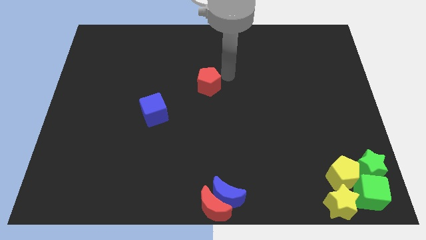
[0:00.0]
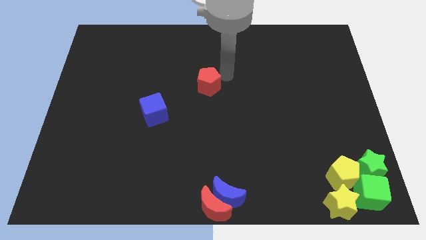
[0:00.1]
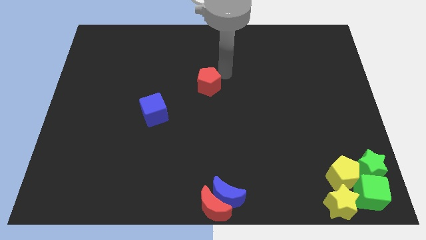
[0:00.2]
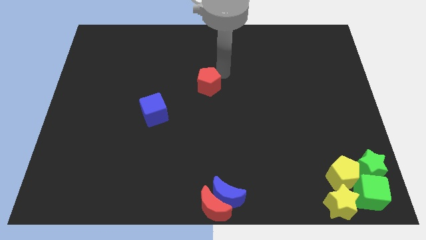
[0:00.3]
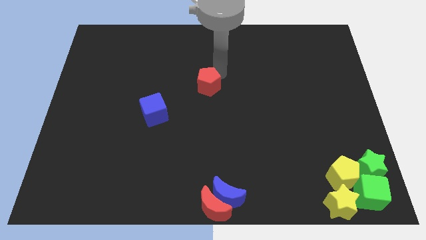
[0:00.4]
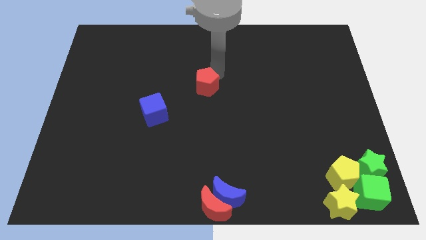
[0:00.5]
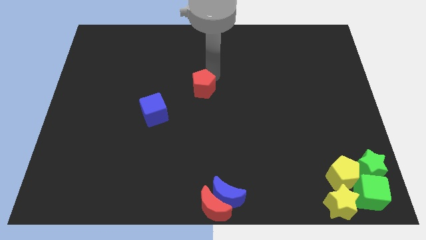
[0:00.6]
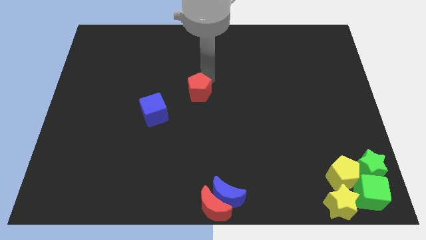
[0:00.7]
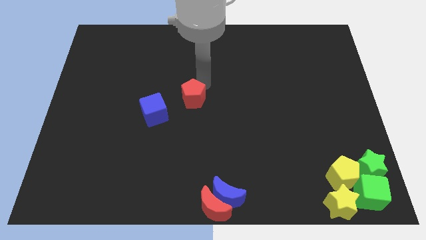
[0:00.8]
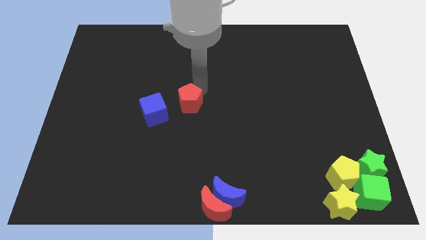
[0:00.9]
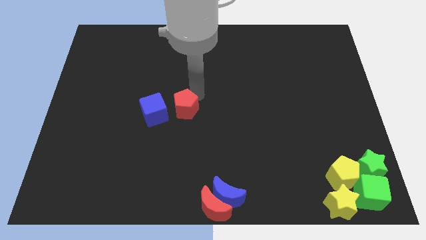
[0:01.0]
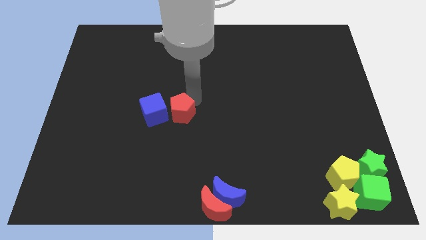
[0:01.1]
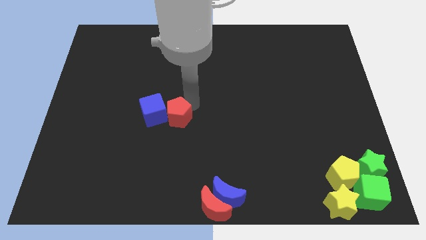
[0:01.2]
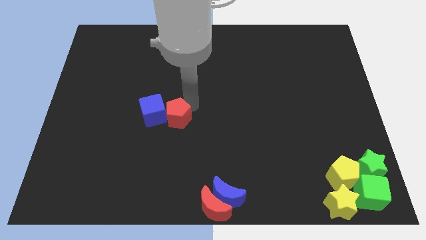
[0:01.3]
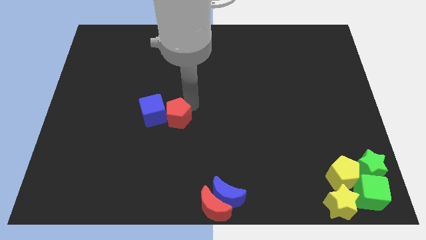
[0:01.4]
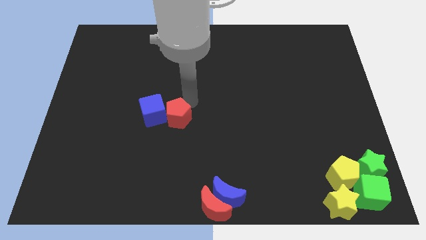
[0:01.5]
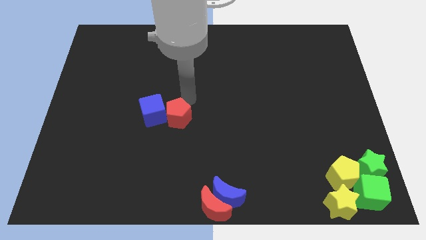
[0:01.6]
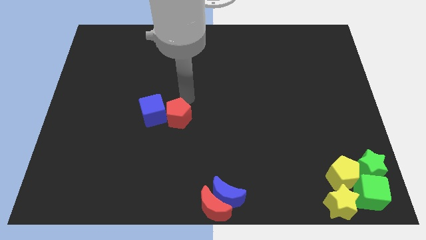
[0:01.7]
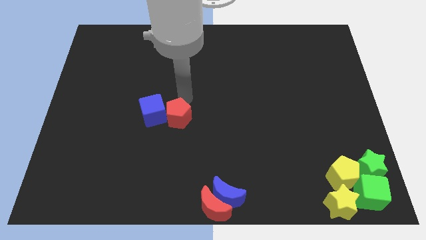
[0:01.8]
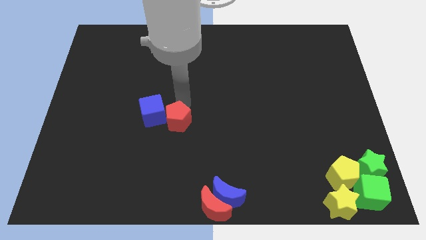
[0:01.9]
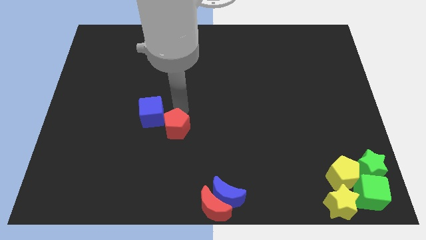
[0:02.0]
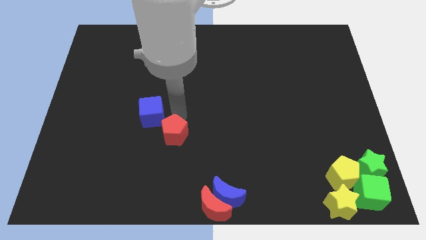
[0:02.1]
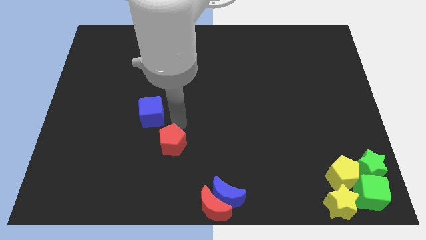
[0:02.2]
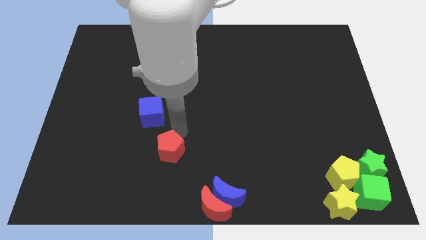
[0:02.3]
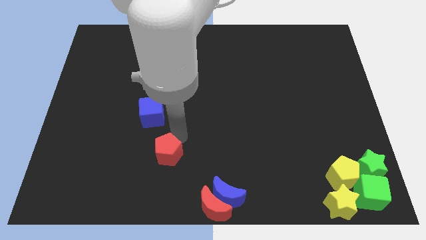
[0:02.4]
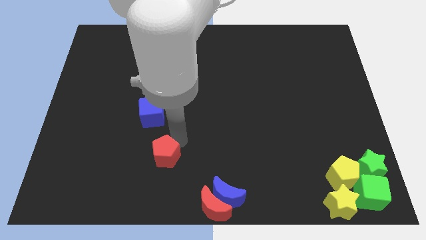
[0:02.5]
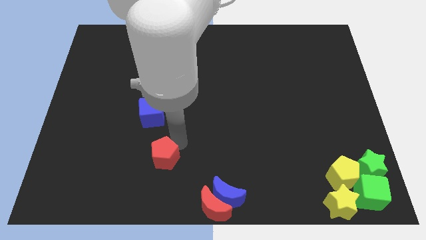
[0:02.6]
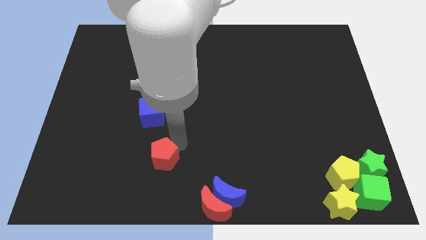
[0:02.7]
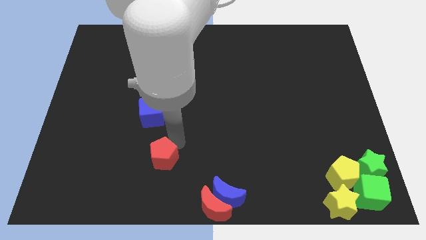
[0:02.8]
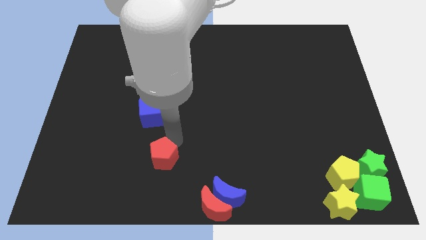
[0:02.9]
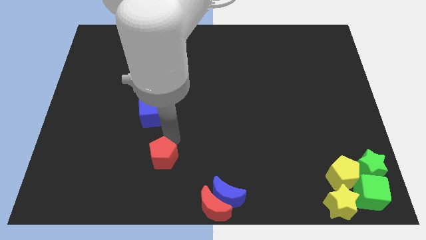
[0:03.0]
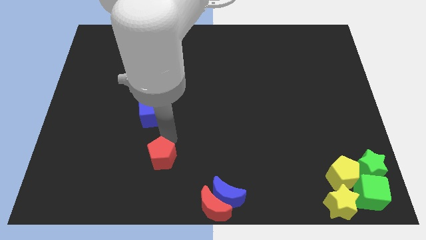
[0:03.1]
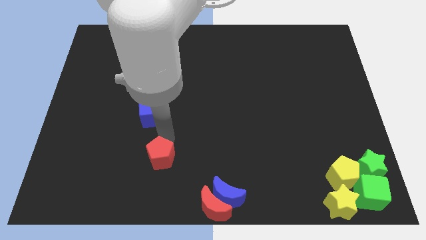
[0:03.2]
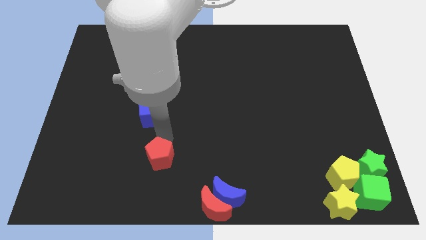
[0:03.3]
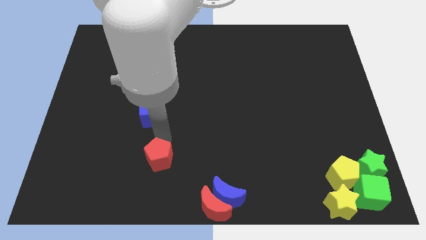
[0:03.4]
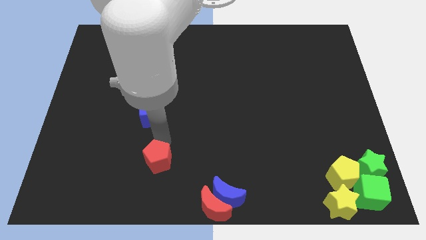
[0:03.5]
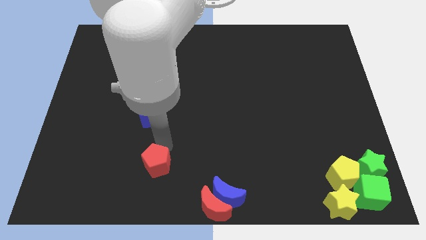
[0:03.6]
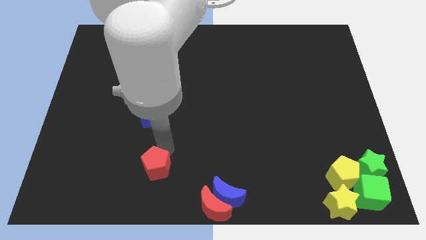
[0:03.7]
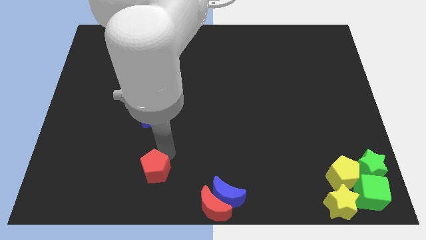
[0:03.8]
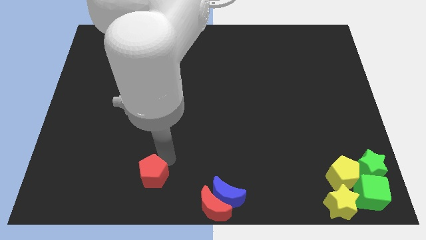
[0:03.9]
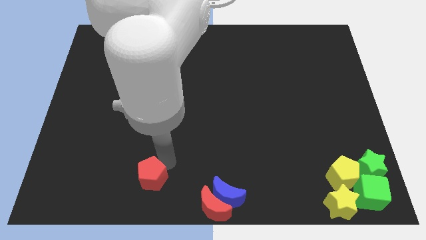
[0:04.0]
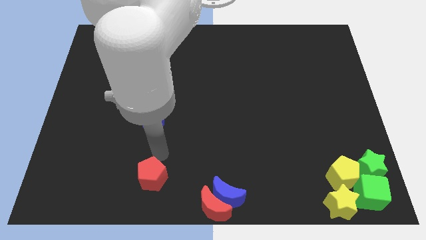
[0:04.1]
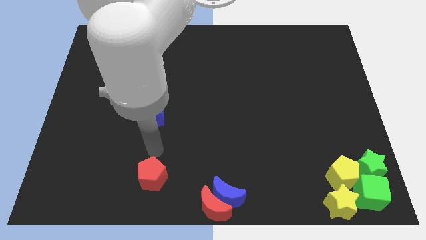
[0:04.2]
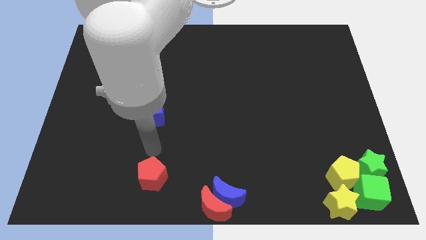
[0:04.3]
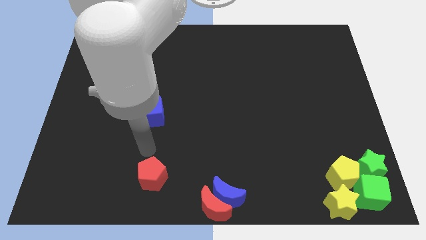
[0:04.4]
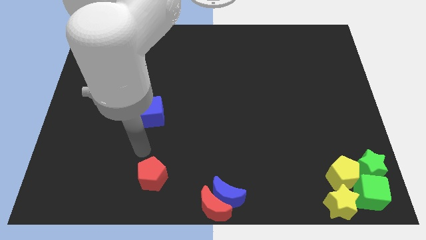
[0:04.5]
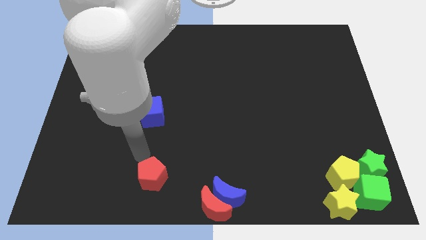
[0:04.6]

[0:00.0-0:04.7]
place the red pentagon vertically below the blue cube

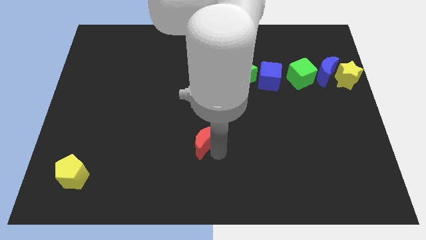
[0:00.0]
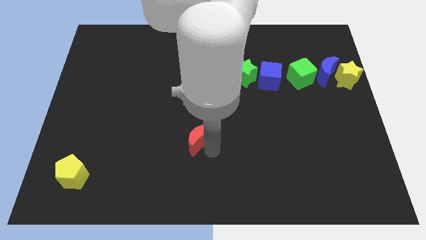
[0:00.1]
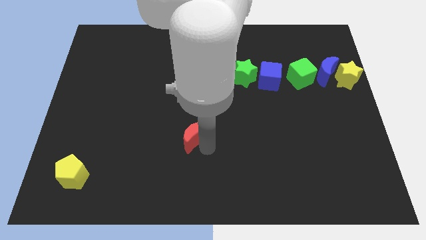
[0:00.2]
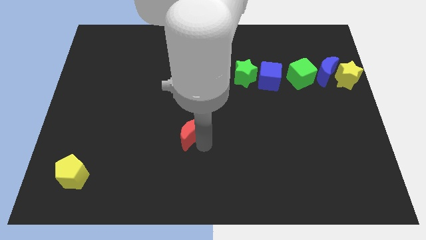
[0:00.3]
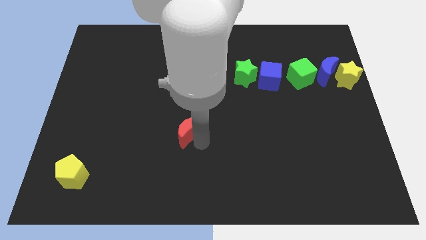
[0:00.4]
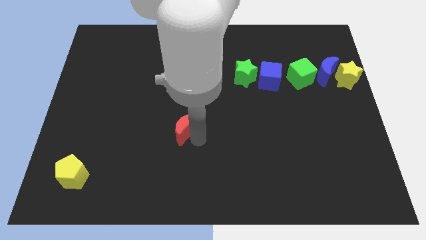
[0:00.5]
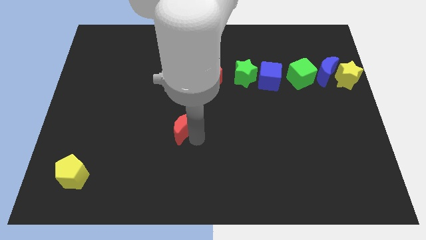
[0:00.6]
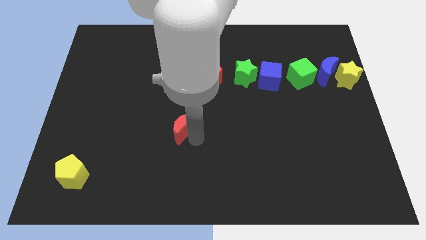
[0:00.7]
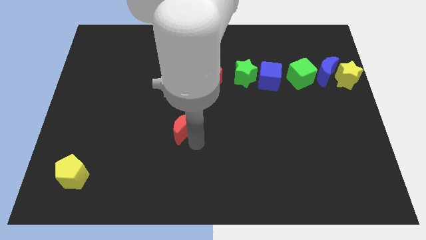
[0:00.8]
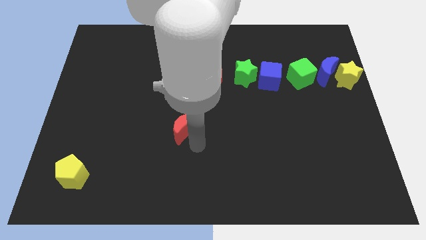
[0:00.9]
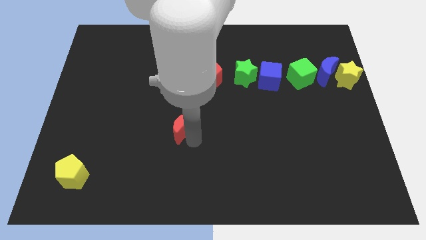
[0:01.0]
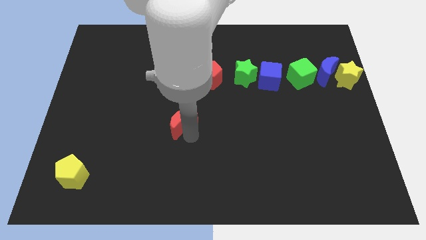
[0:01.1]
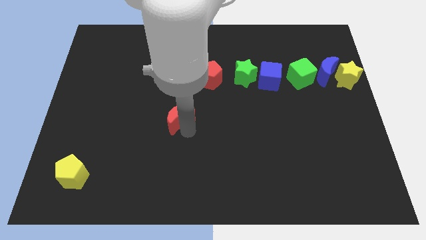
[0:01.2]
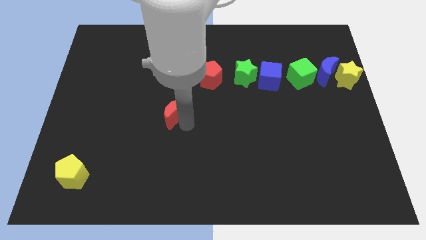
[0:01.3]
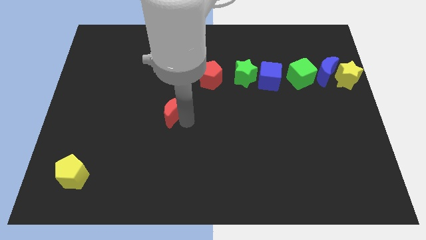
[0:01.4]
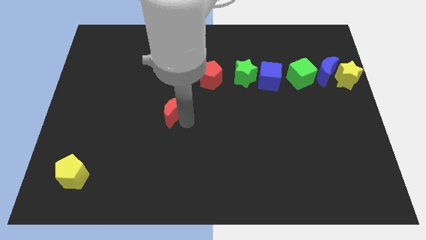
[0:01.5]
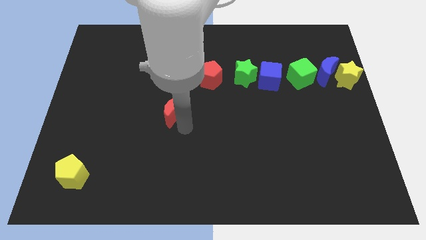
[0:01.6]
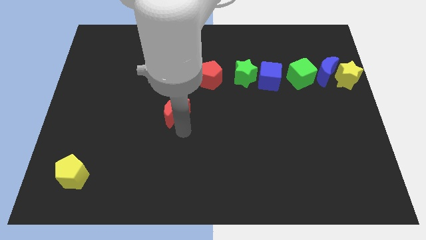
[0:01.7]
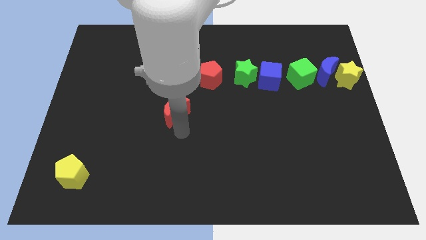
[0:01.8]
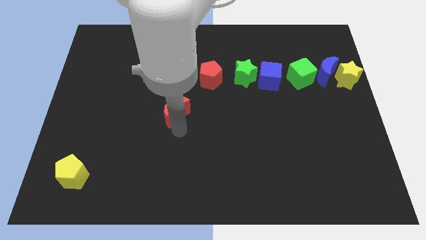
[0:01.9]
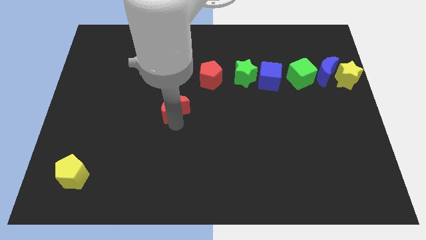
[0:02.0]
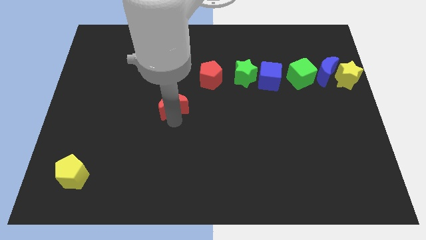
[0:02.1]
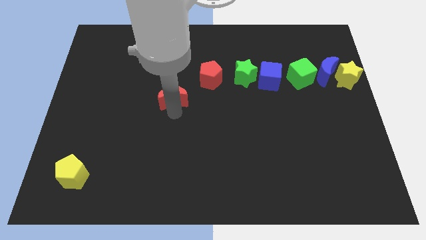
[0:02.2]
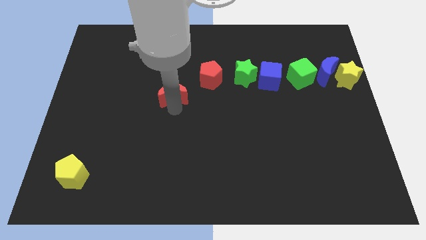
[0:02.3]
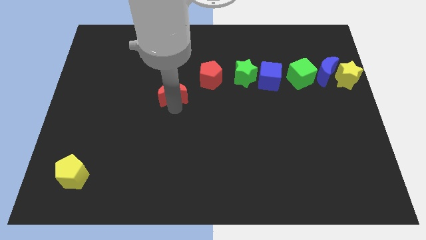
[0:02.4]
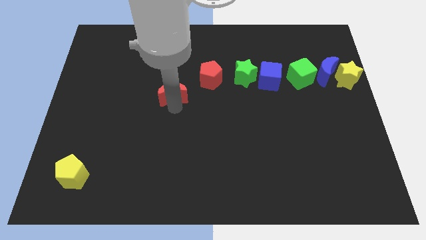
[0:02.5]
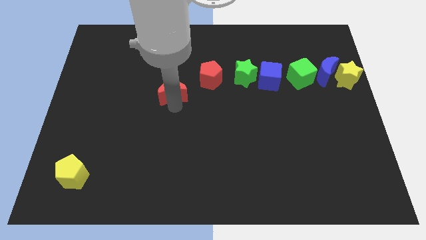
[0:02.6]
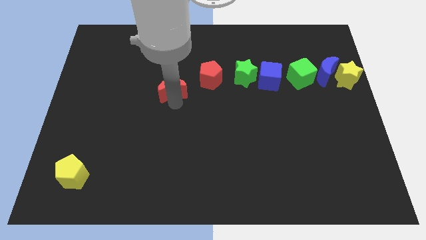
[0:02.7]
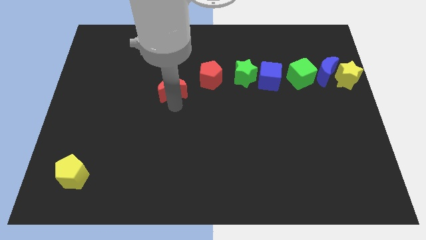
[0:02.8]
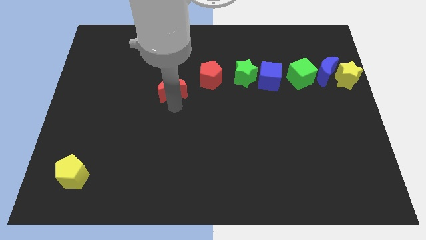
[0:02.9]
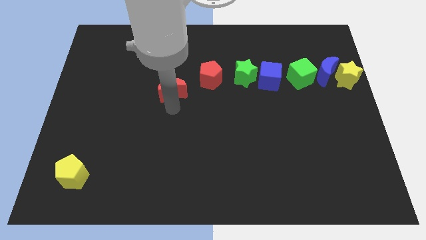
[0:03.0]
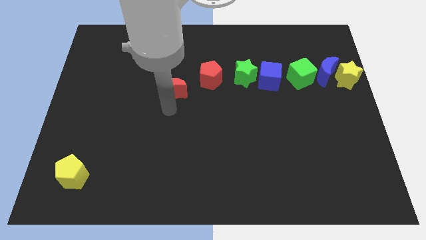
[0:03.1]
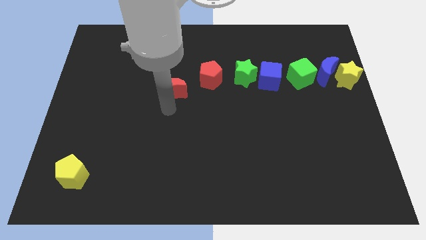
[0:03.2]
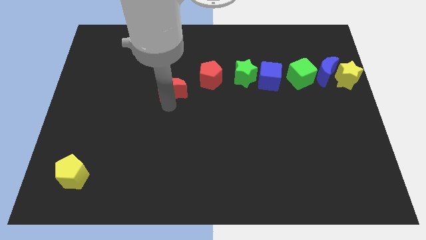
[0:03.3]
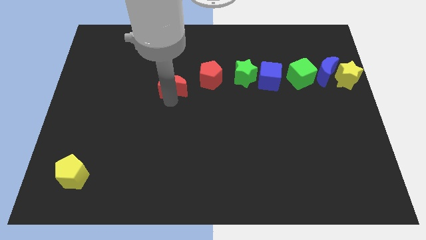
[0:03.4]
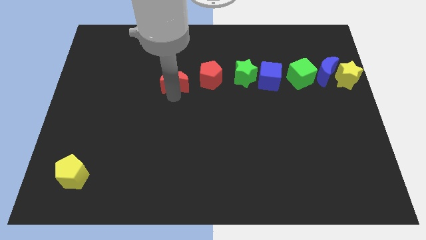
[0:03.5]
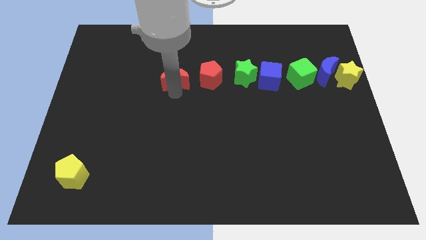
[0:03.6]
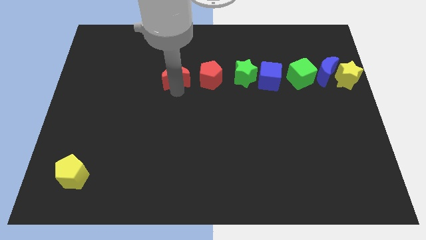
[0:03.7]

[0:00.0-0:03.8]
push the red crescent to the left of the red pentagon

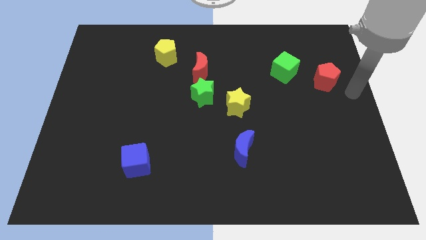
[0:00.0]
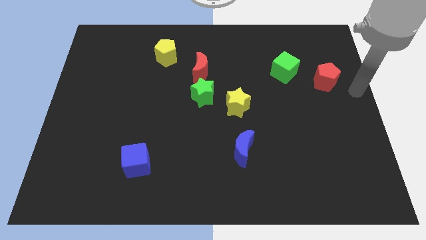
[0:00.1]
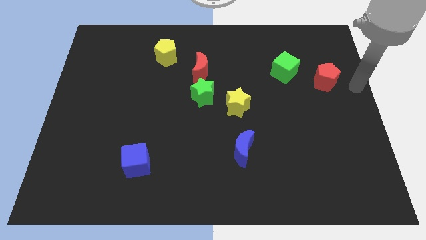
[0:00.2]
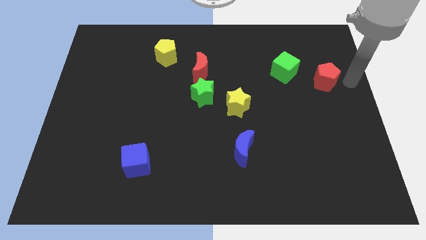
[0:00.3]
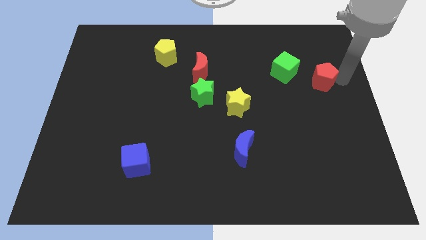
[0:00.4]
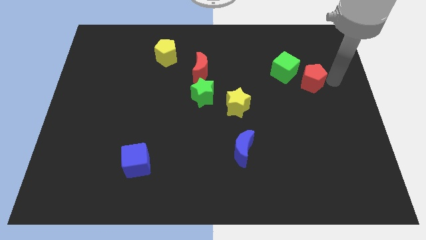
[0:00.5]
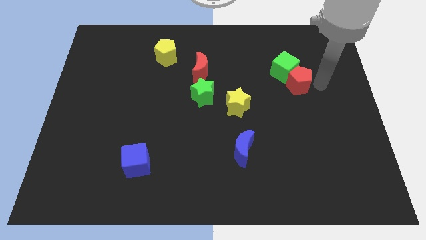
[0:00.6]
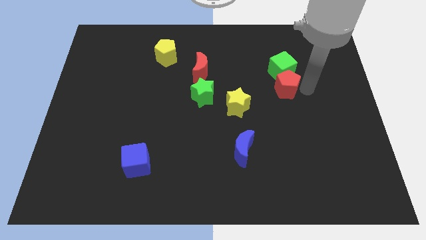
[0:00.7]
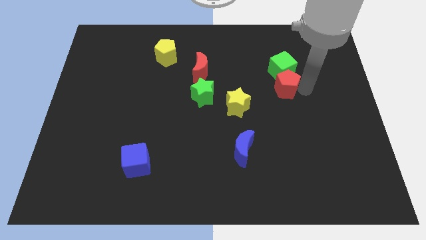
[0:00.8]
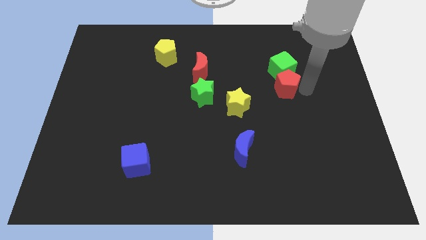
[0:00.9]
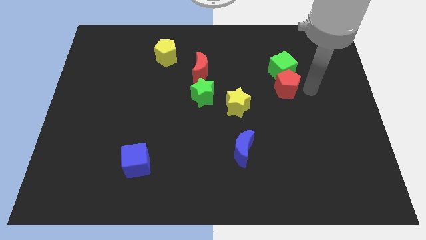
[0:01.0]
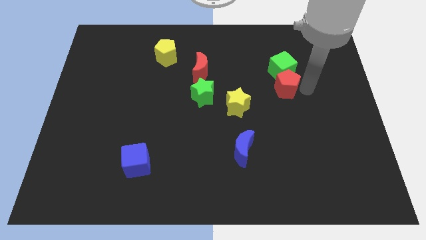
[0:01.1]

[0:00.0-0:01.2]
place the red pentagon below the green cube
